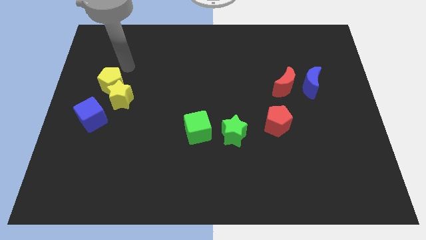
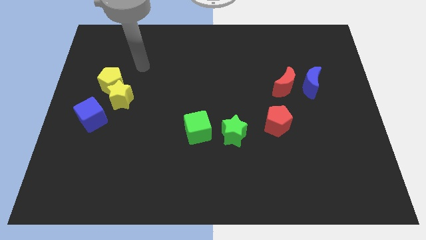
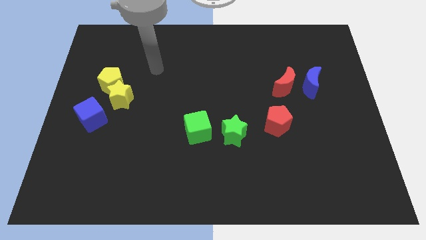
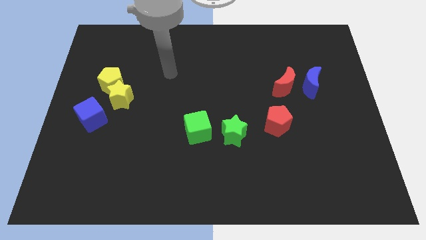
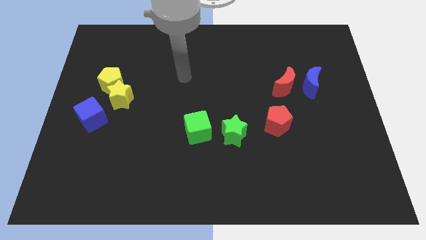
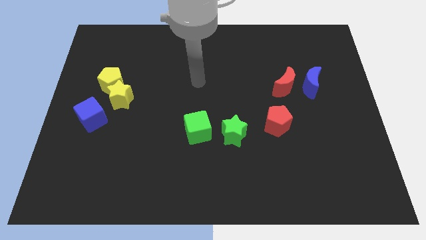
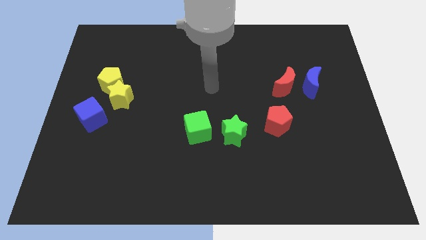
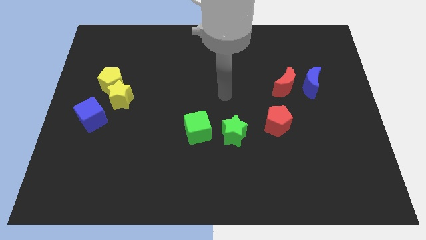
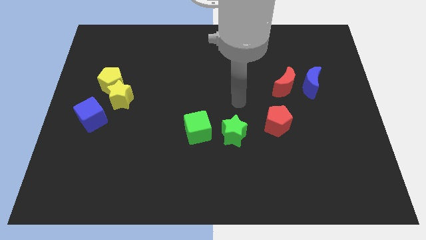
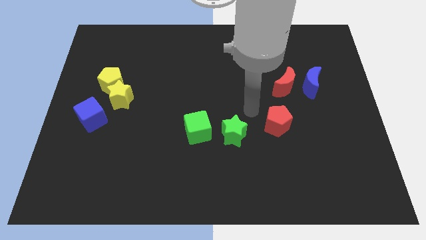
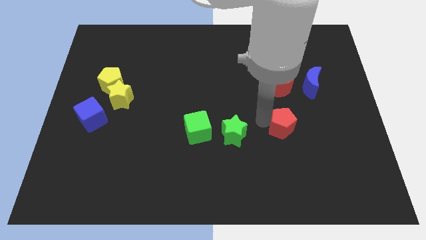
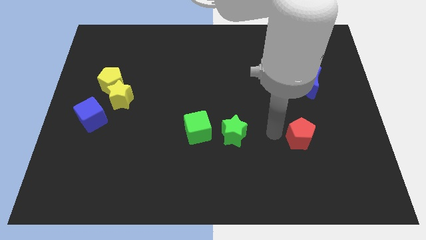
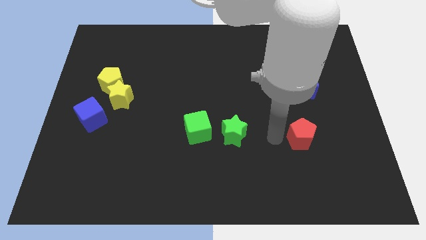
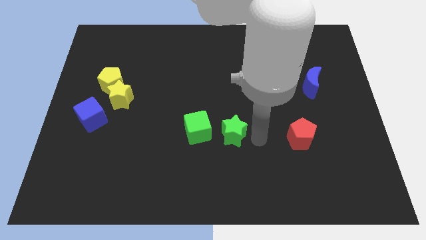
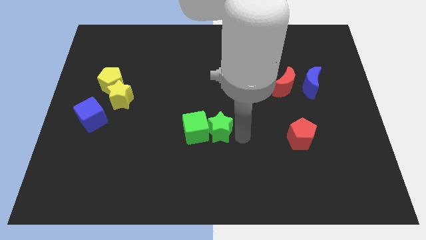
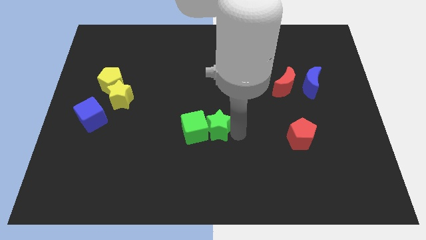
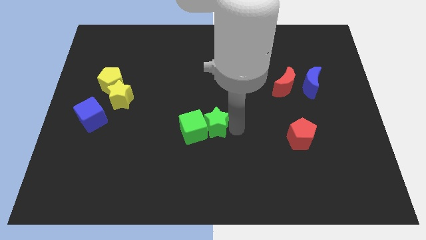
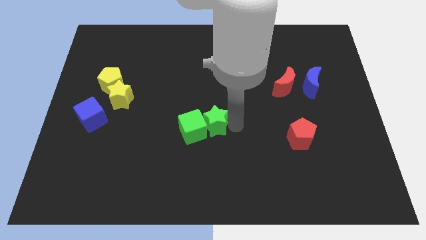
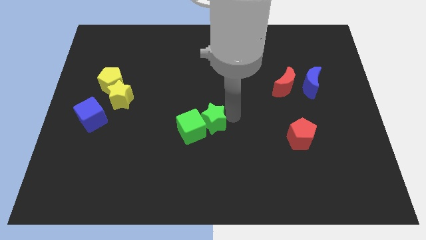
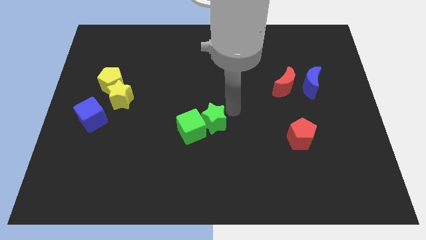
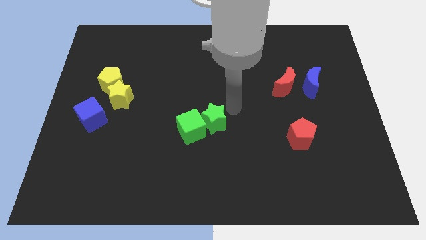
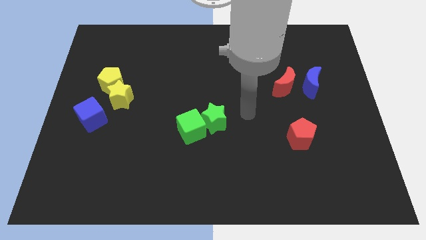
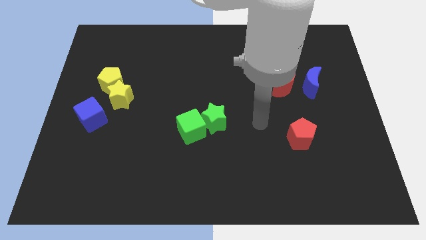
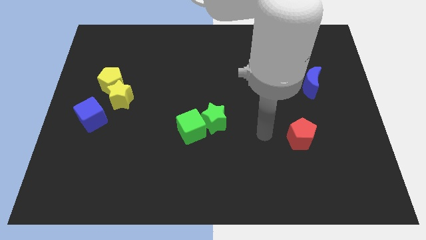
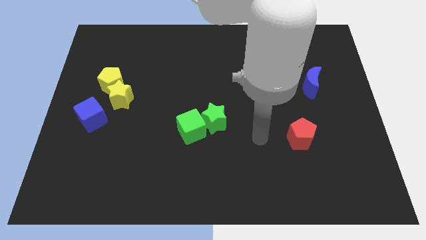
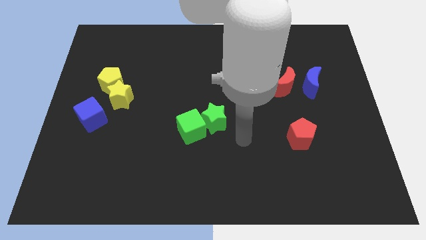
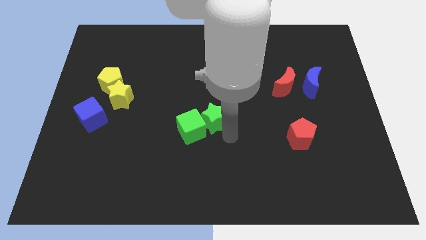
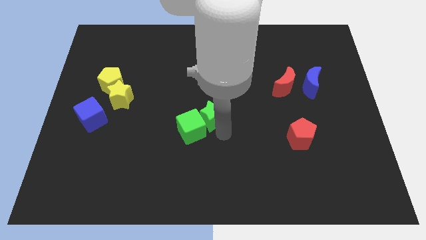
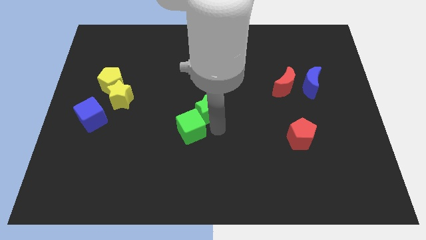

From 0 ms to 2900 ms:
push the green star into the green cube

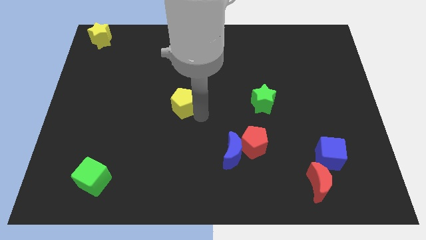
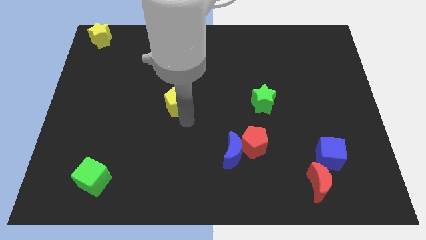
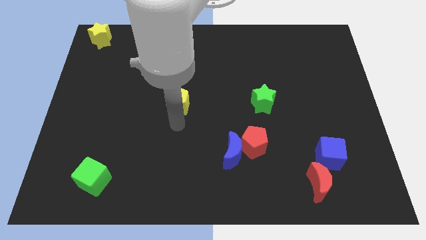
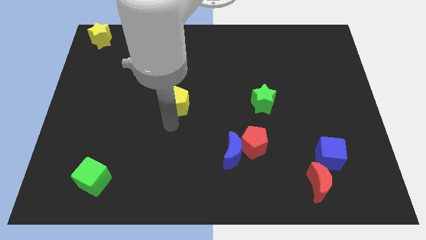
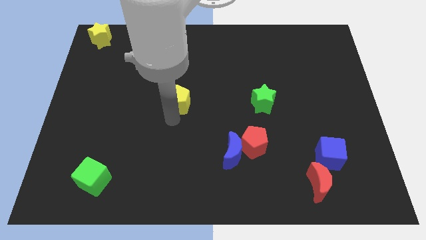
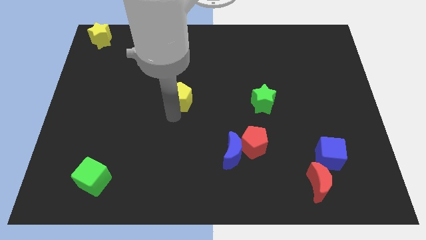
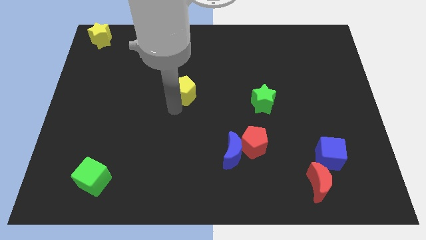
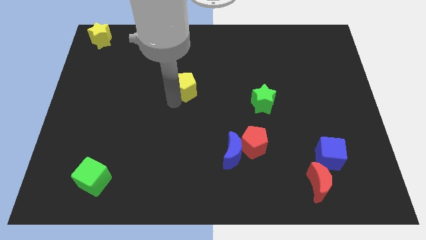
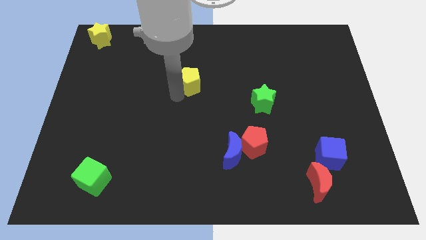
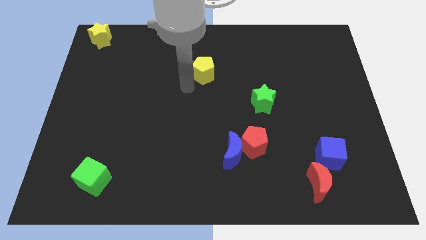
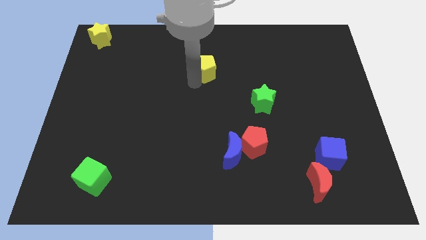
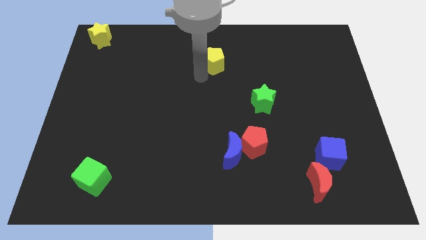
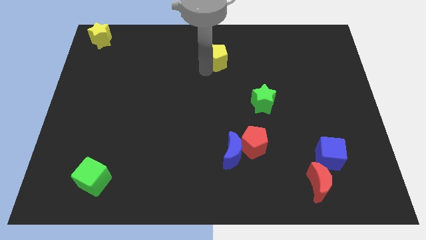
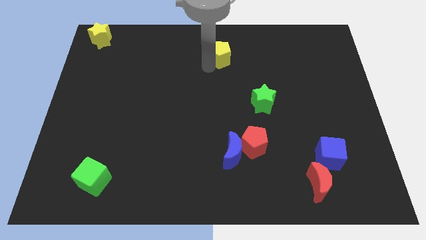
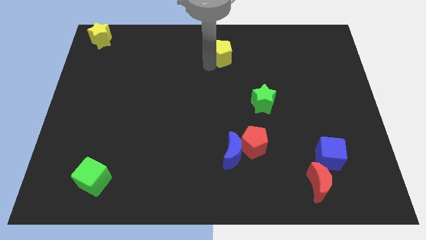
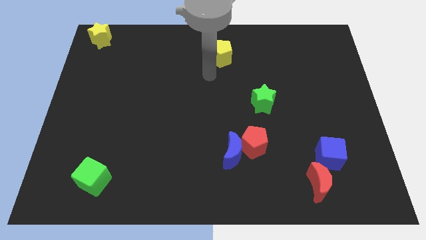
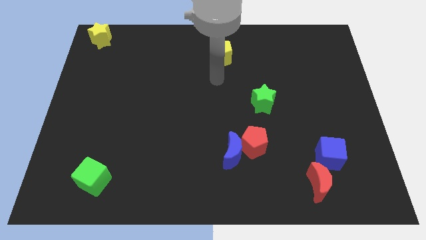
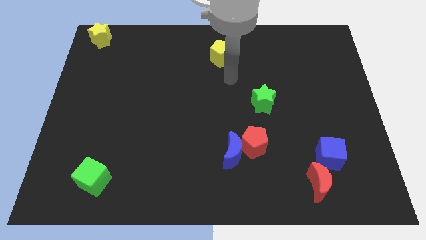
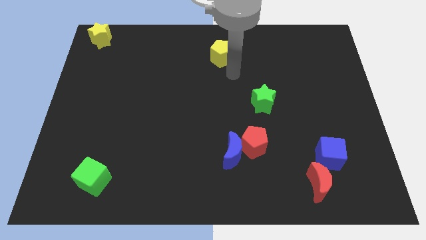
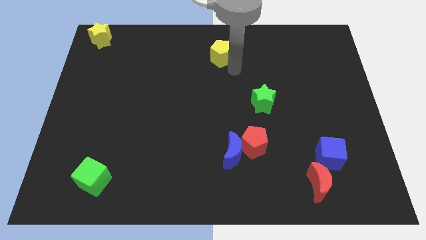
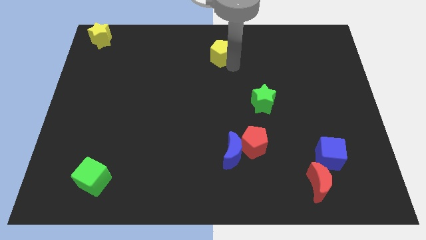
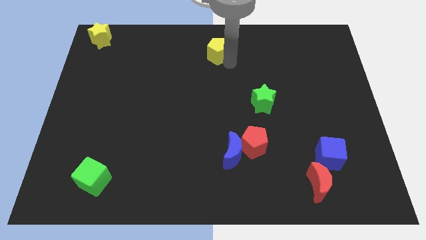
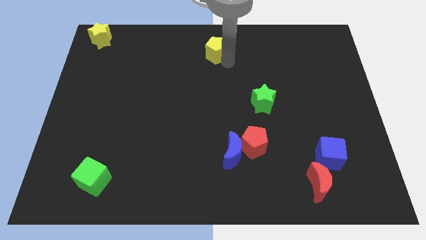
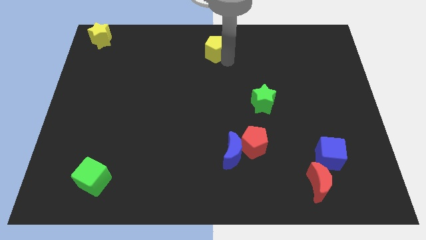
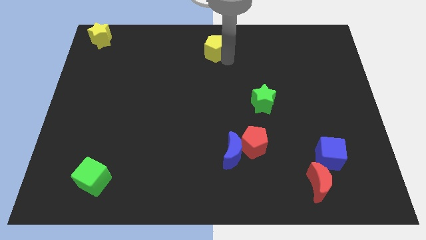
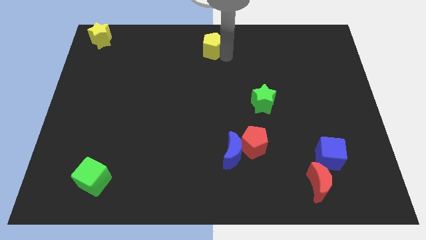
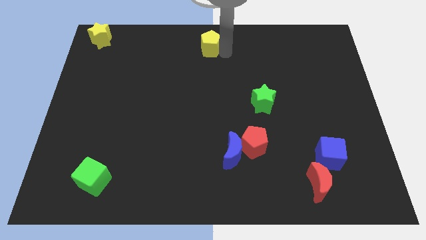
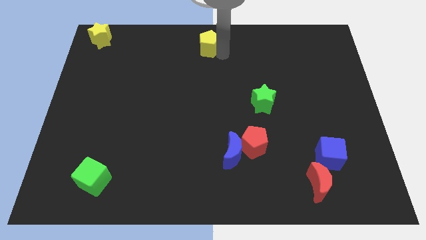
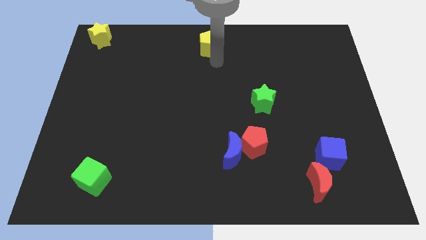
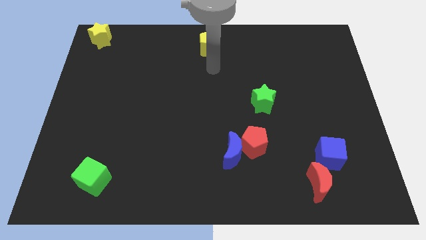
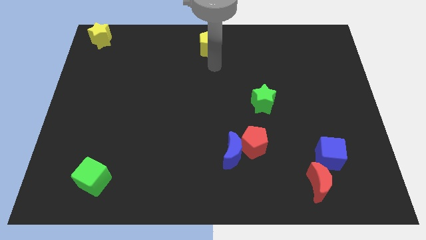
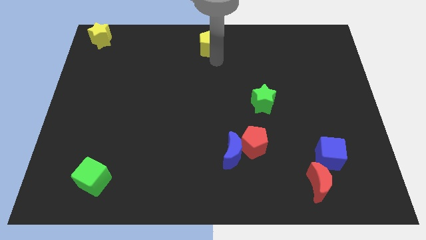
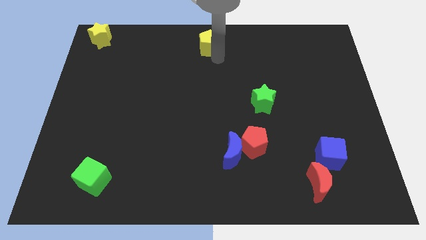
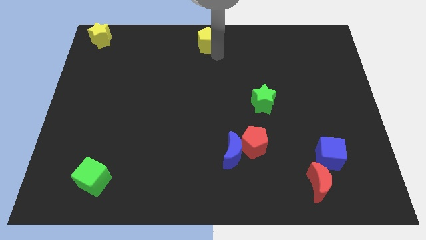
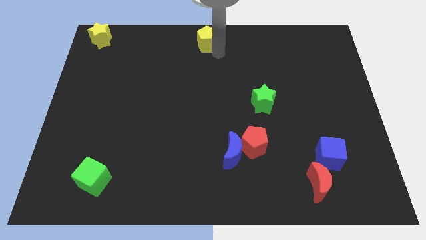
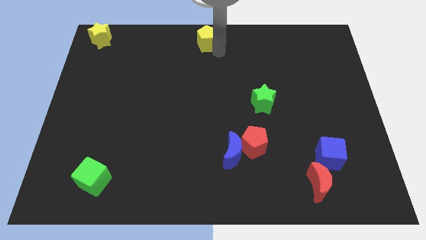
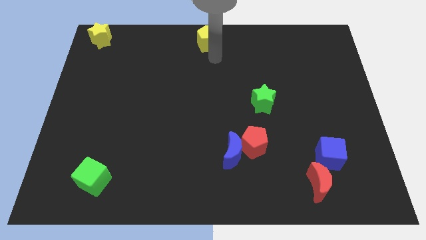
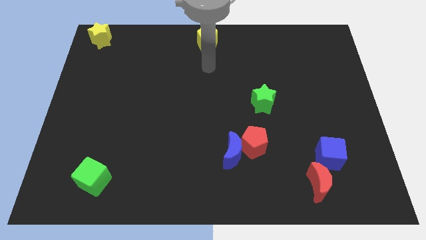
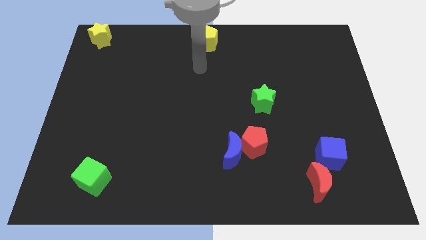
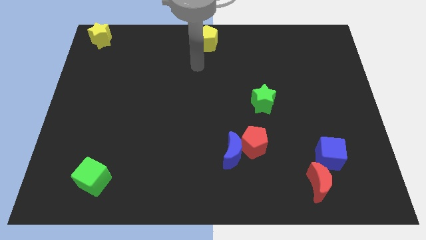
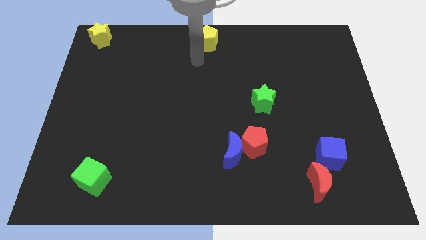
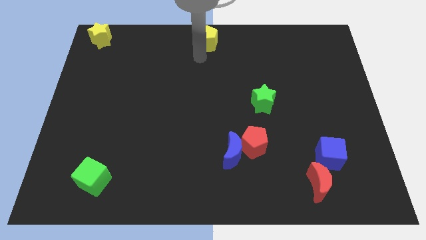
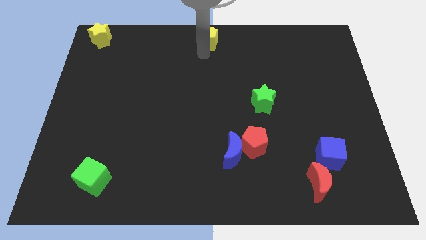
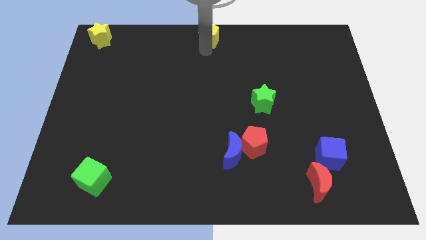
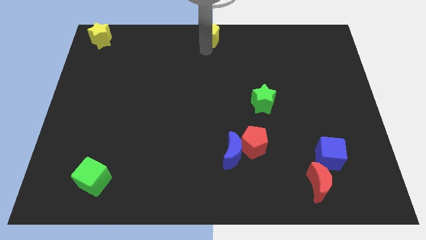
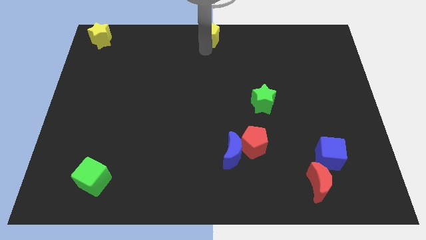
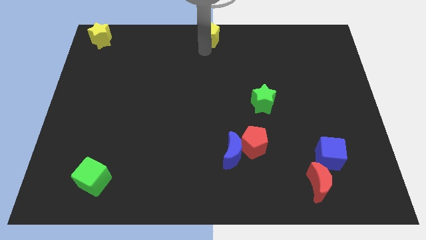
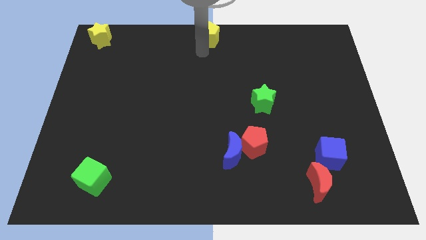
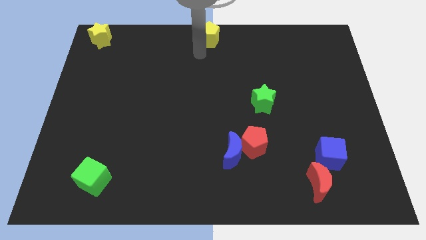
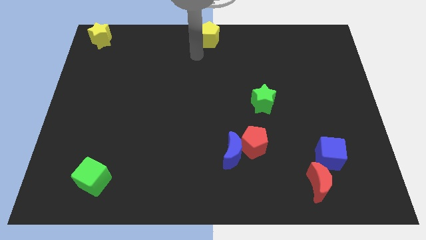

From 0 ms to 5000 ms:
move the yellow pentagon to the top center of the board

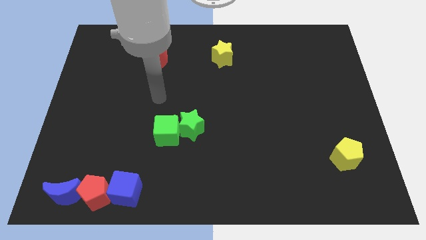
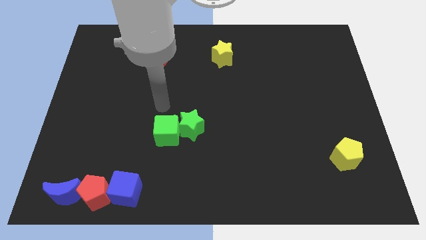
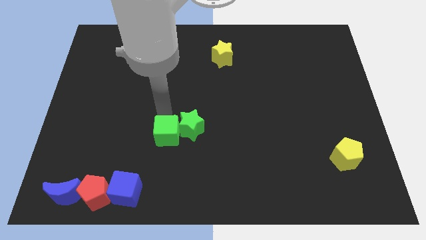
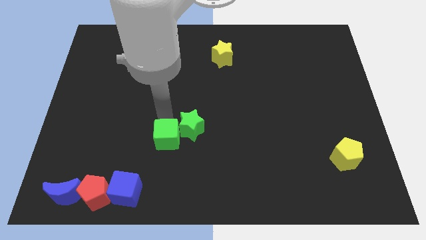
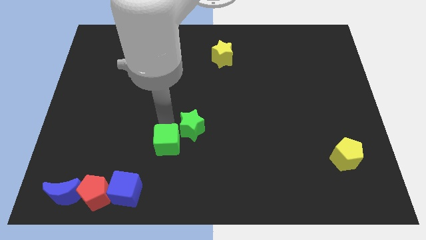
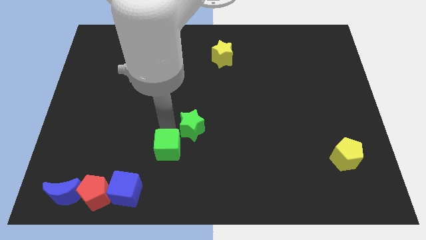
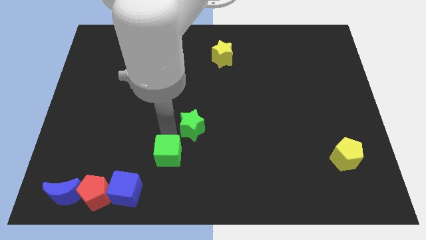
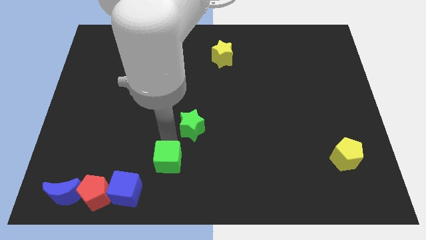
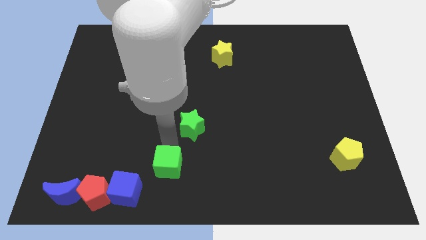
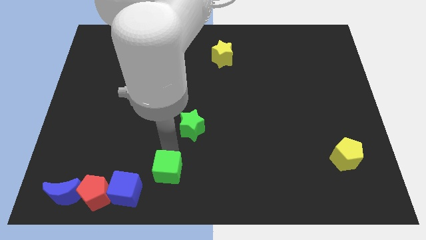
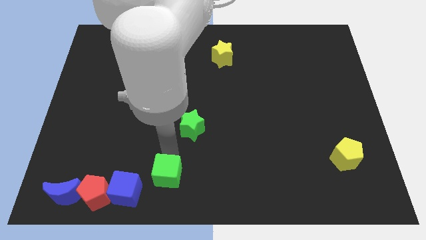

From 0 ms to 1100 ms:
separate the green cube and green star
